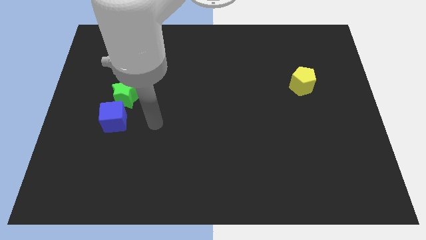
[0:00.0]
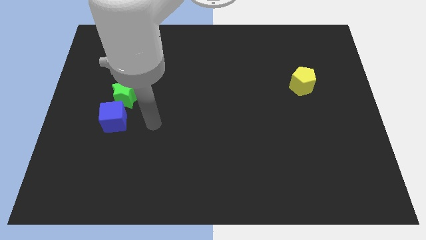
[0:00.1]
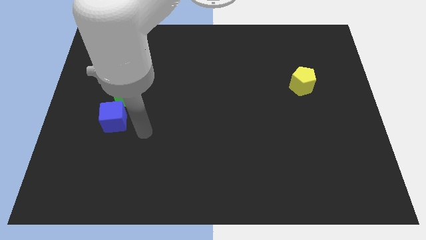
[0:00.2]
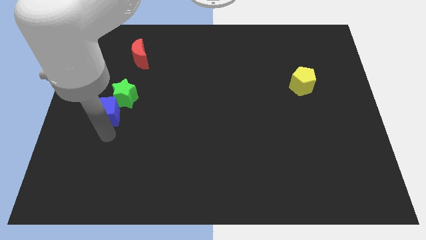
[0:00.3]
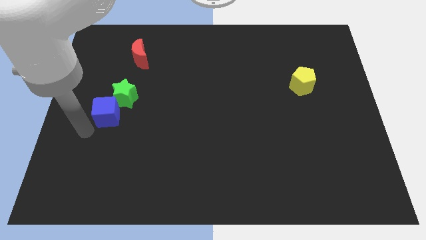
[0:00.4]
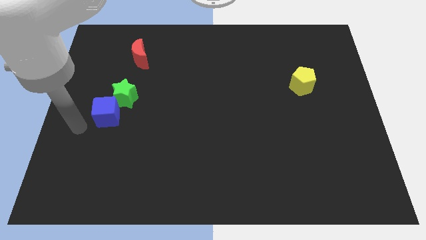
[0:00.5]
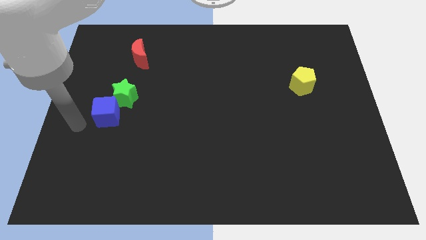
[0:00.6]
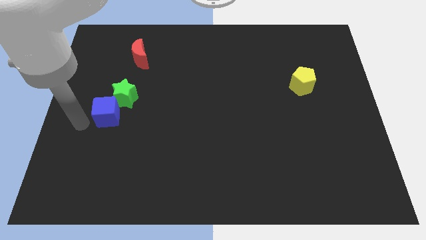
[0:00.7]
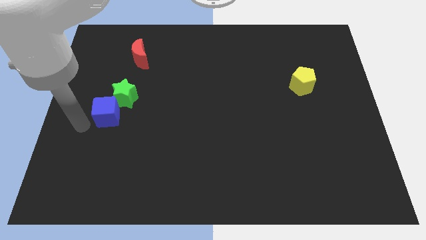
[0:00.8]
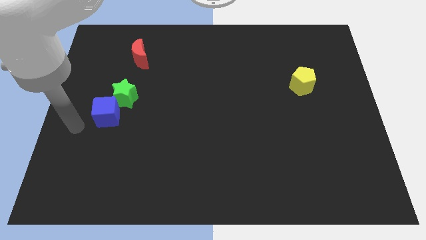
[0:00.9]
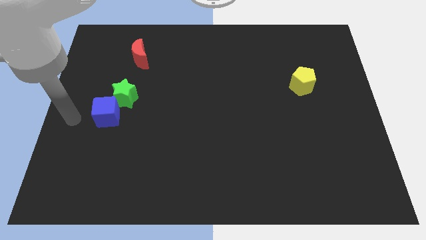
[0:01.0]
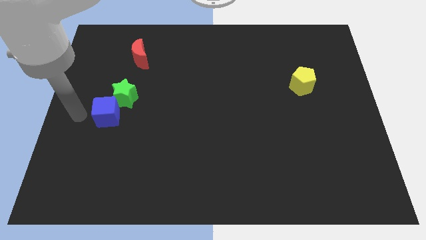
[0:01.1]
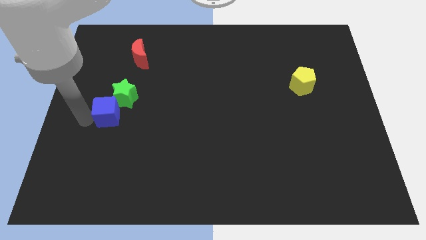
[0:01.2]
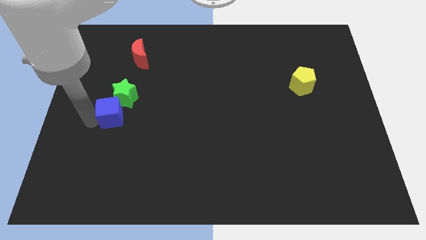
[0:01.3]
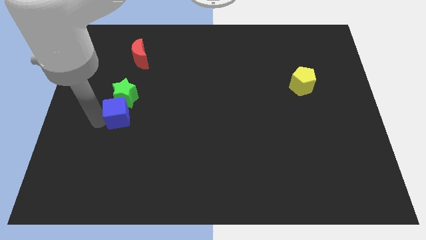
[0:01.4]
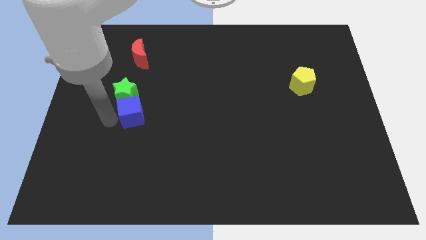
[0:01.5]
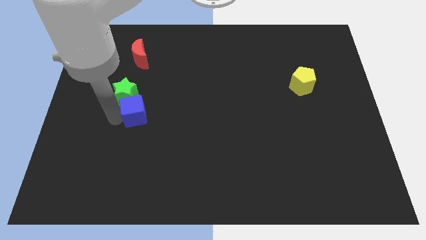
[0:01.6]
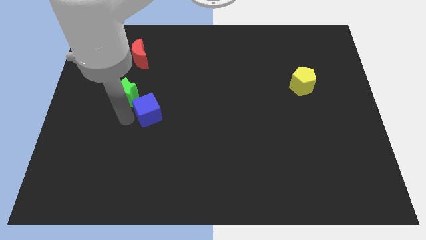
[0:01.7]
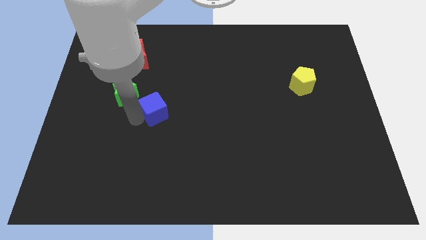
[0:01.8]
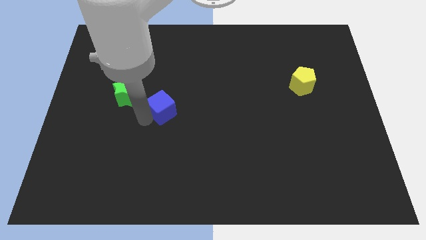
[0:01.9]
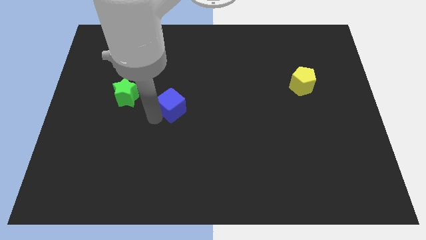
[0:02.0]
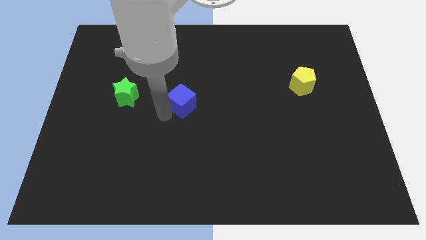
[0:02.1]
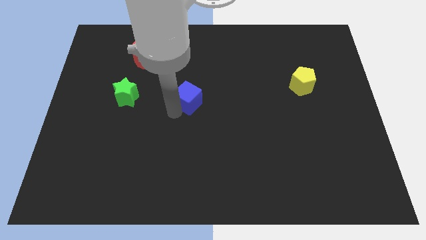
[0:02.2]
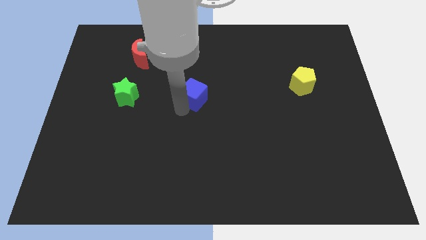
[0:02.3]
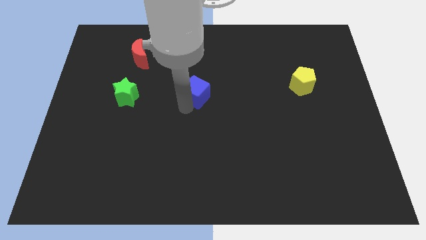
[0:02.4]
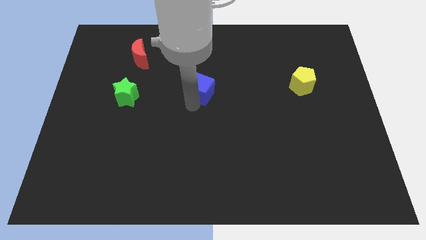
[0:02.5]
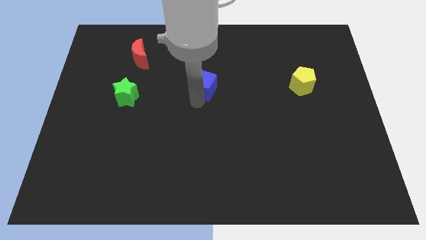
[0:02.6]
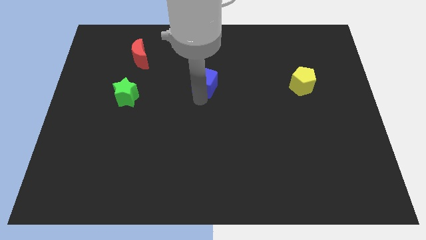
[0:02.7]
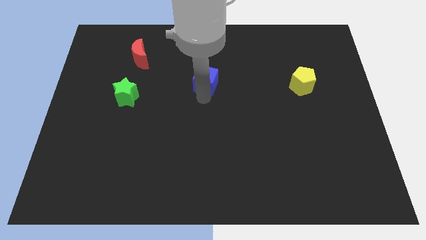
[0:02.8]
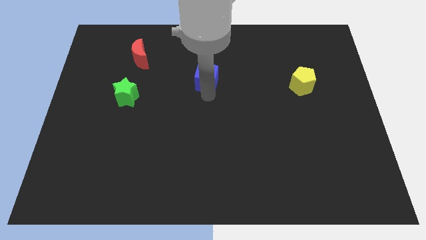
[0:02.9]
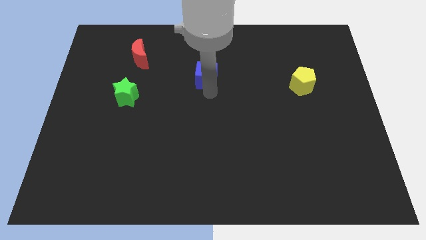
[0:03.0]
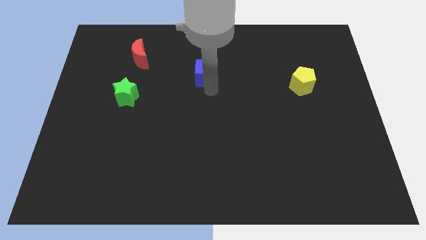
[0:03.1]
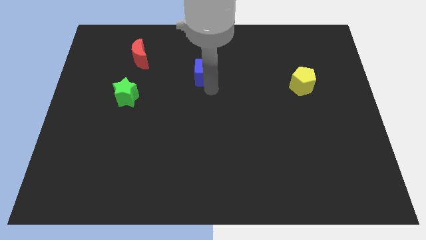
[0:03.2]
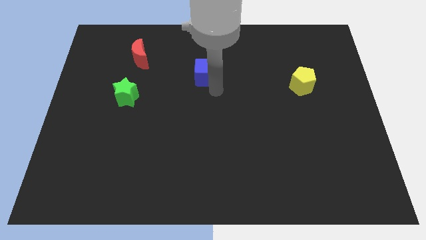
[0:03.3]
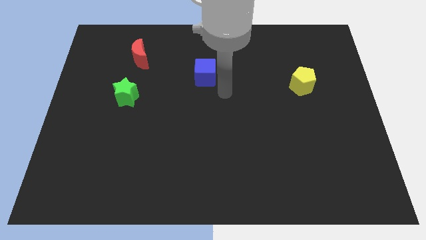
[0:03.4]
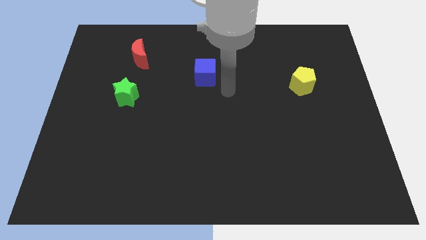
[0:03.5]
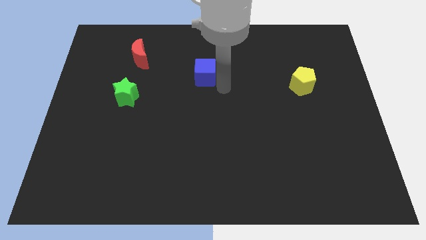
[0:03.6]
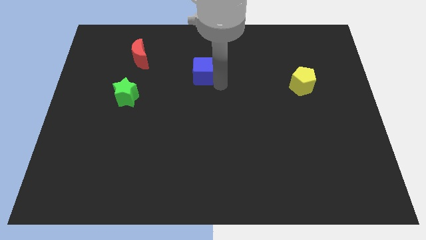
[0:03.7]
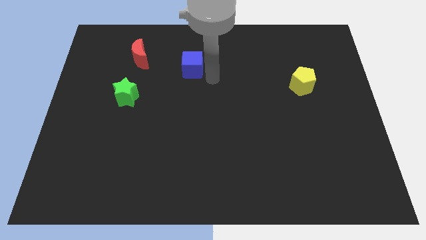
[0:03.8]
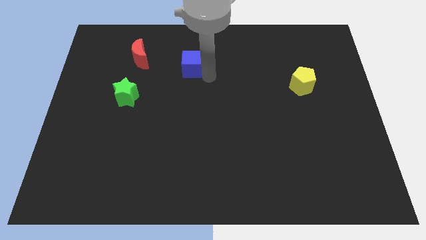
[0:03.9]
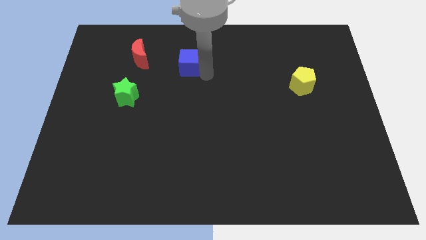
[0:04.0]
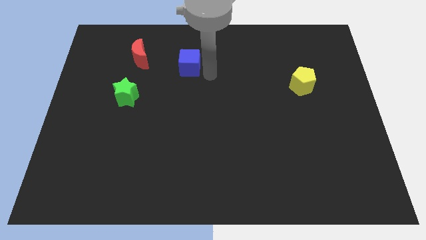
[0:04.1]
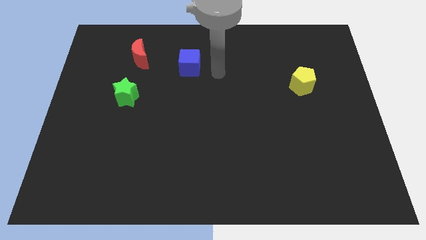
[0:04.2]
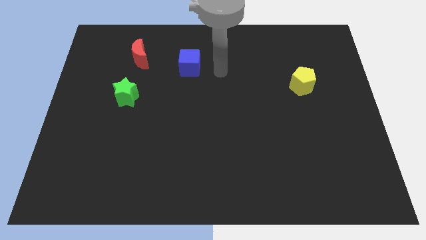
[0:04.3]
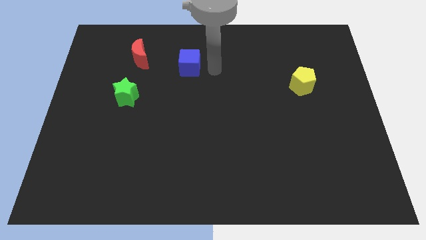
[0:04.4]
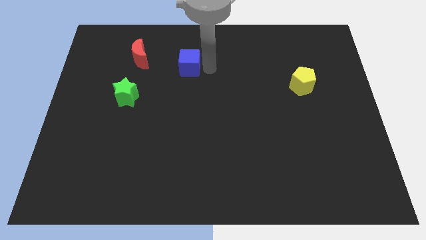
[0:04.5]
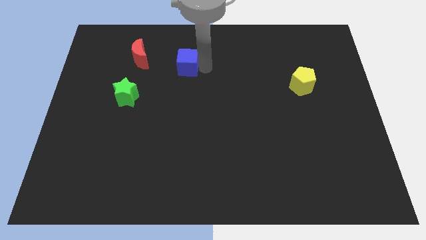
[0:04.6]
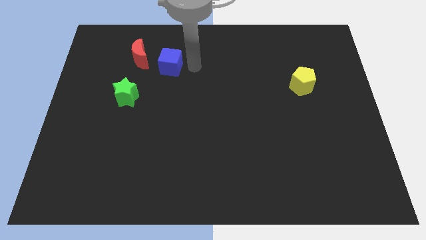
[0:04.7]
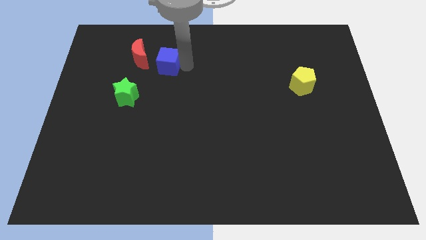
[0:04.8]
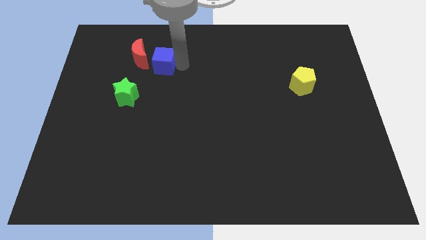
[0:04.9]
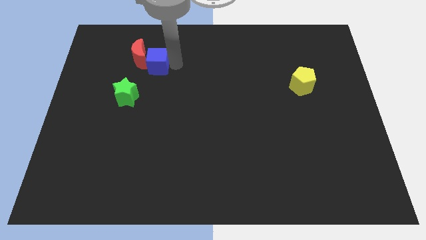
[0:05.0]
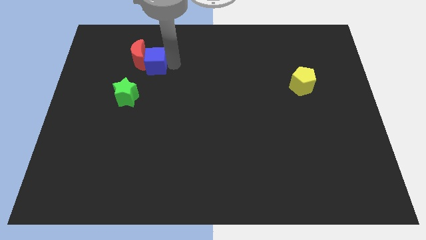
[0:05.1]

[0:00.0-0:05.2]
put the blue cube towards the red block

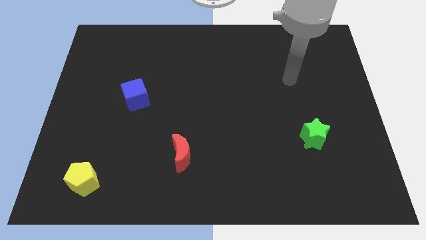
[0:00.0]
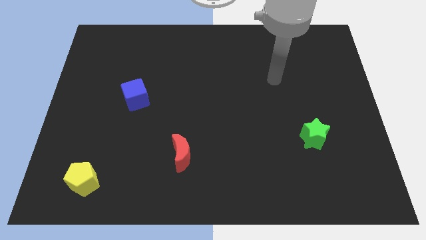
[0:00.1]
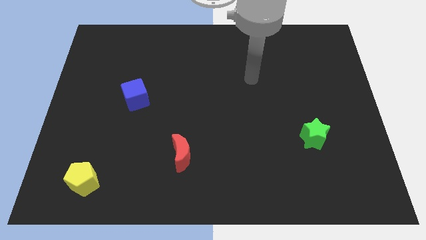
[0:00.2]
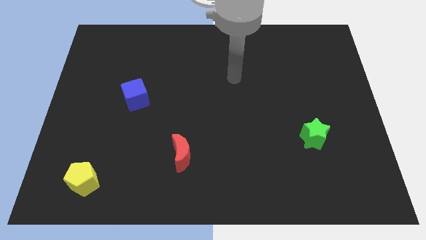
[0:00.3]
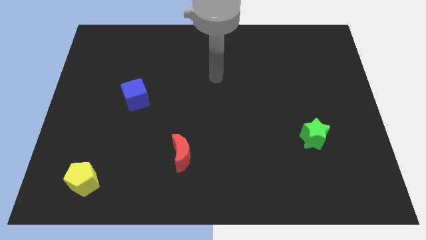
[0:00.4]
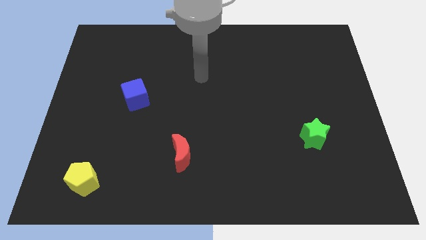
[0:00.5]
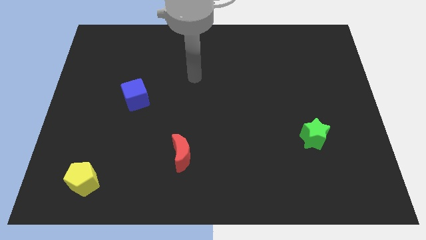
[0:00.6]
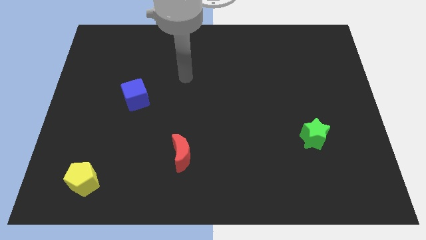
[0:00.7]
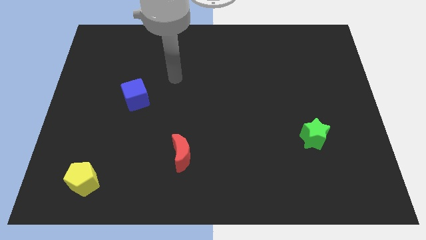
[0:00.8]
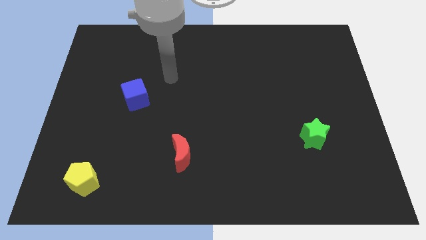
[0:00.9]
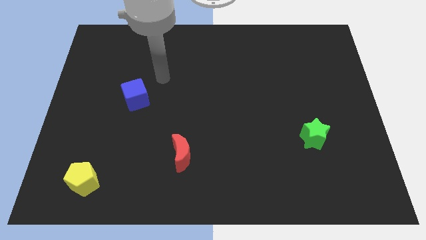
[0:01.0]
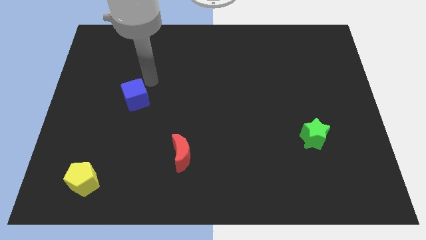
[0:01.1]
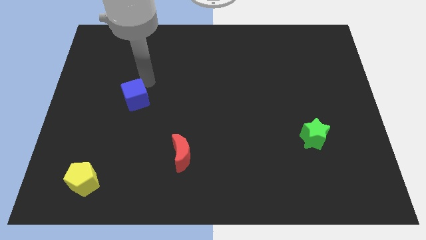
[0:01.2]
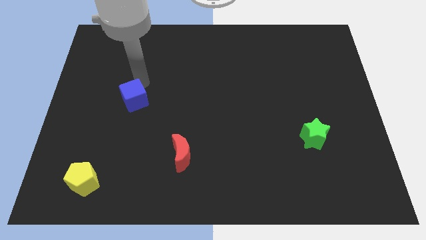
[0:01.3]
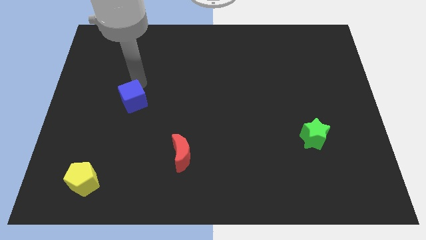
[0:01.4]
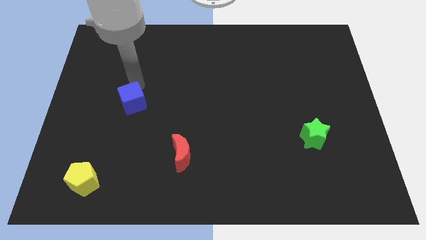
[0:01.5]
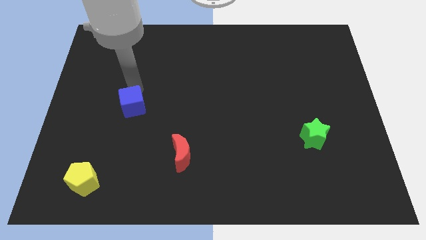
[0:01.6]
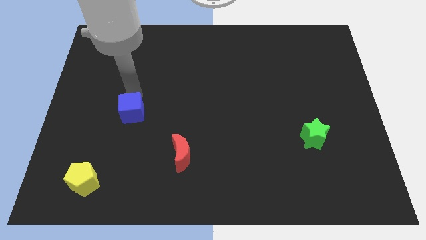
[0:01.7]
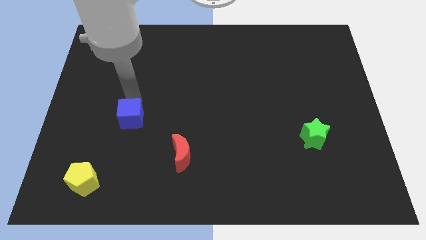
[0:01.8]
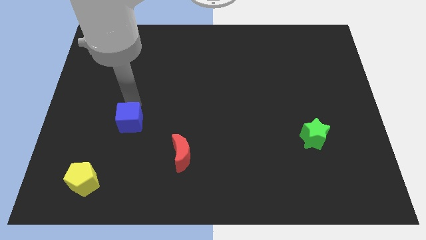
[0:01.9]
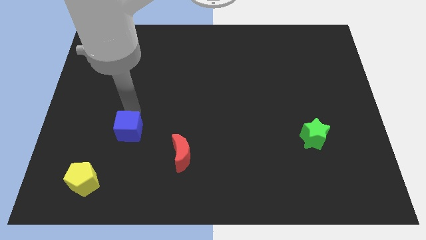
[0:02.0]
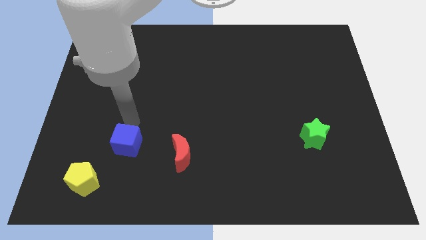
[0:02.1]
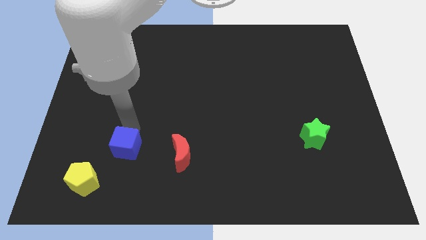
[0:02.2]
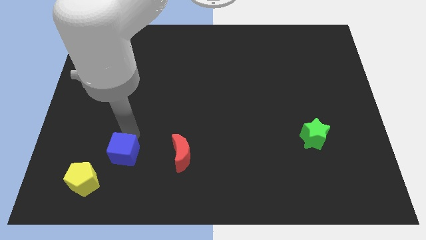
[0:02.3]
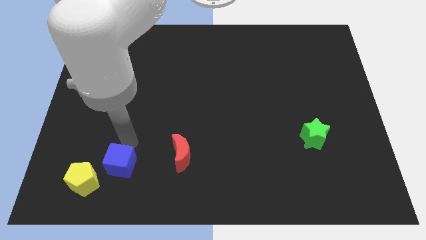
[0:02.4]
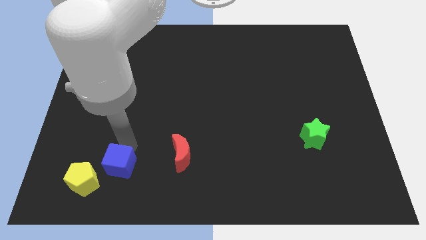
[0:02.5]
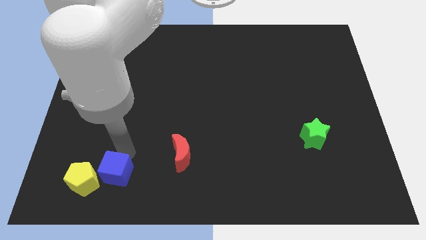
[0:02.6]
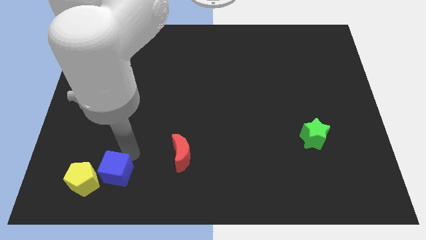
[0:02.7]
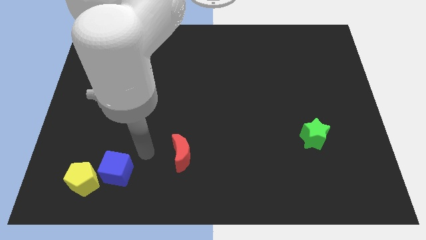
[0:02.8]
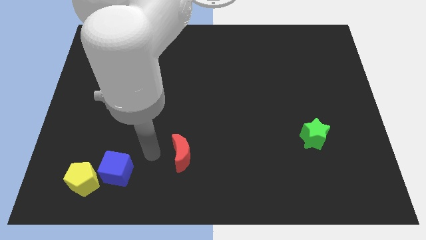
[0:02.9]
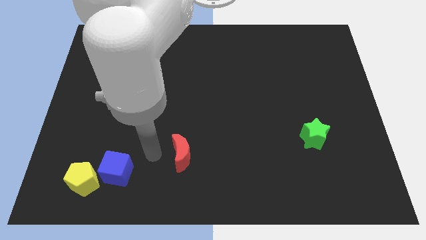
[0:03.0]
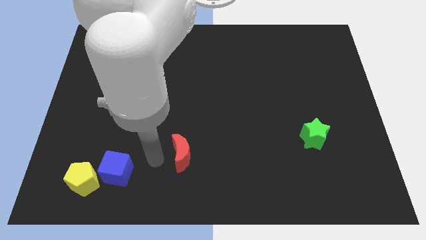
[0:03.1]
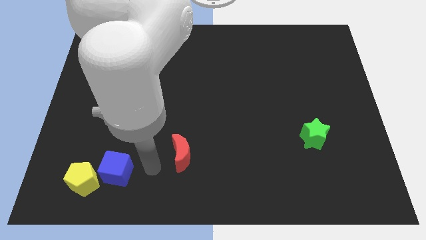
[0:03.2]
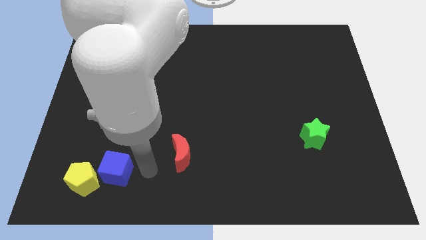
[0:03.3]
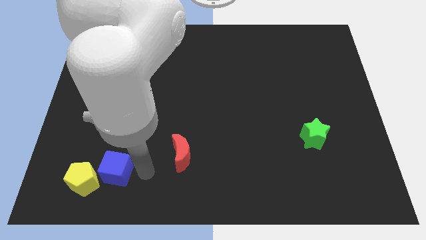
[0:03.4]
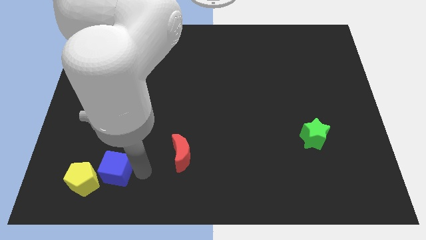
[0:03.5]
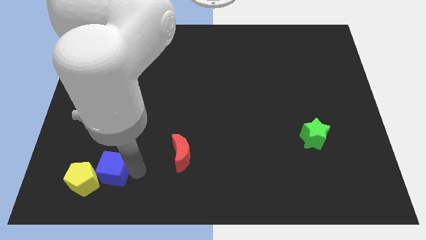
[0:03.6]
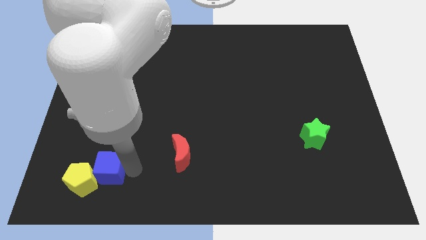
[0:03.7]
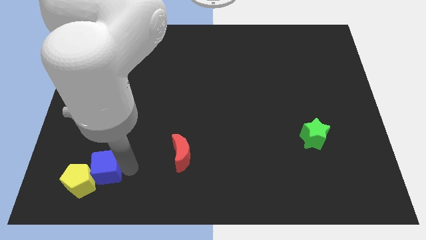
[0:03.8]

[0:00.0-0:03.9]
slide the blue block close to the yellow block
